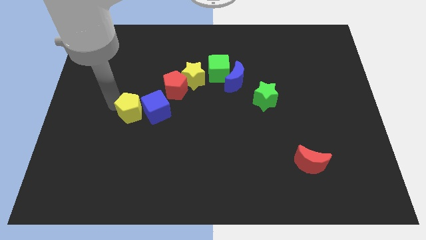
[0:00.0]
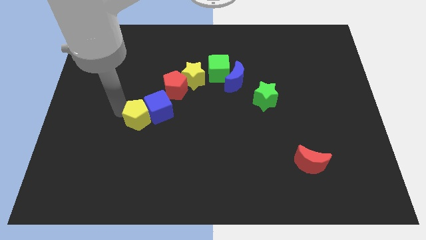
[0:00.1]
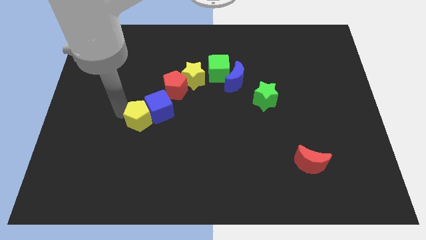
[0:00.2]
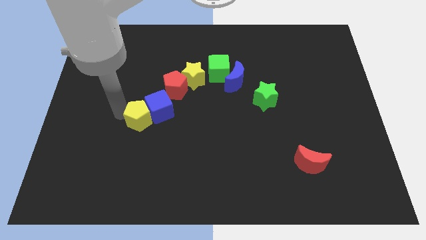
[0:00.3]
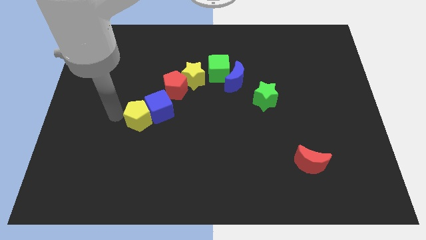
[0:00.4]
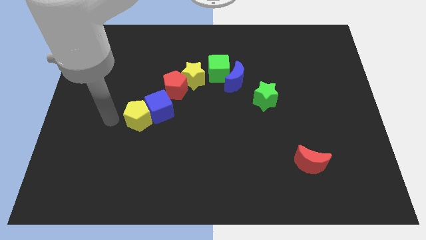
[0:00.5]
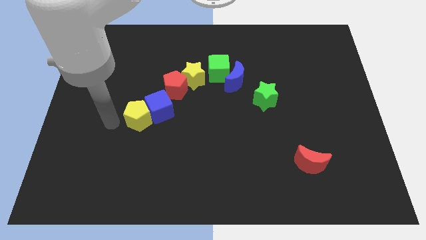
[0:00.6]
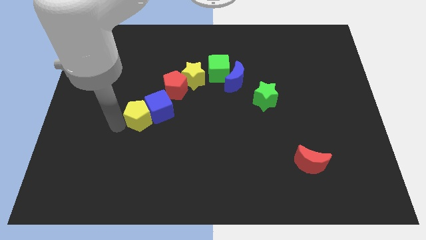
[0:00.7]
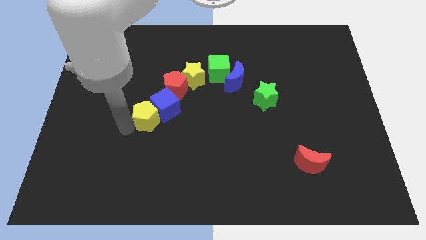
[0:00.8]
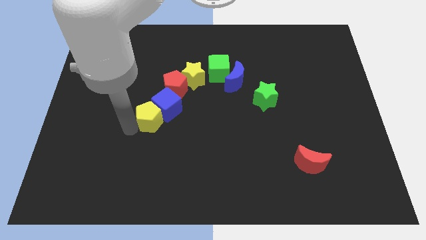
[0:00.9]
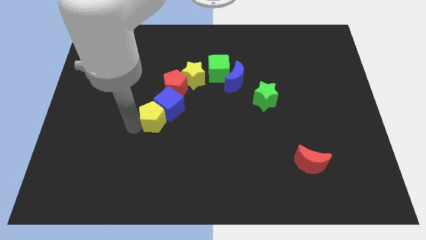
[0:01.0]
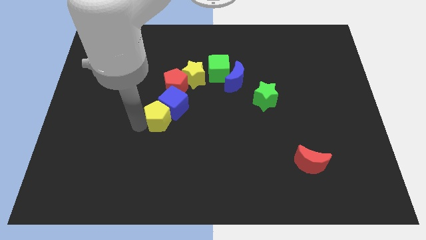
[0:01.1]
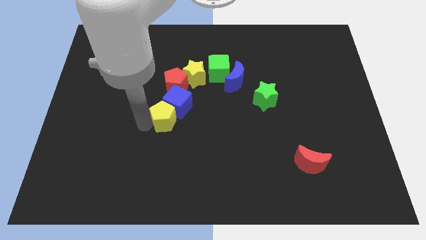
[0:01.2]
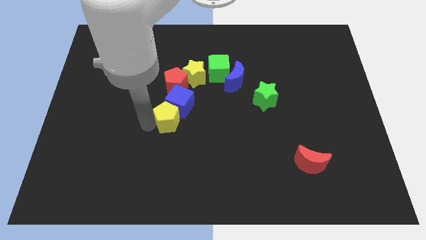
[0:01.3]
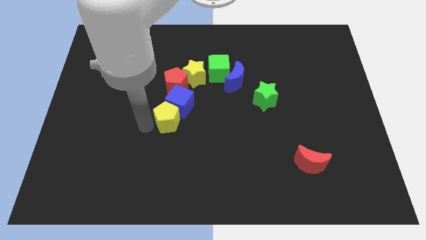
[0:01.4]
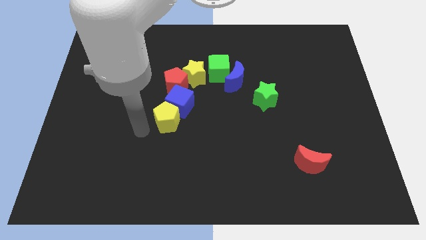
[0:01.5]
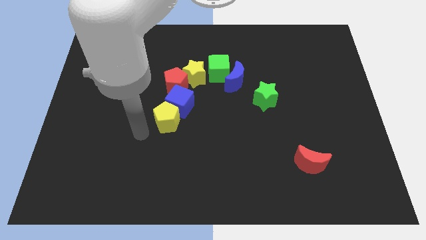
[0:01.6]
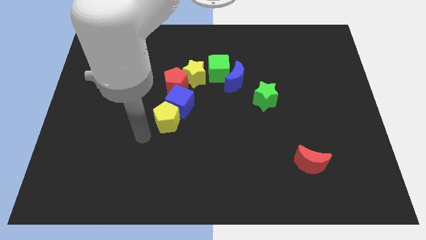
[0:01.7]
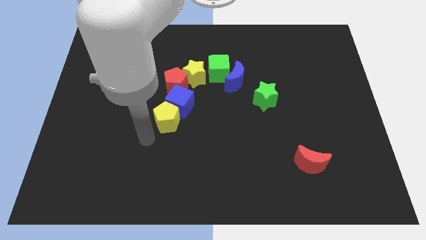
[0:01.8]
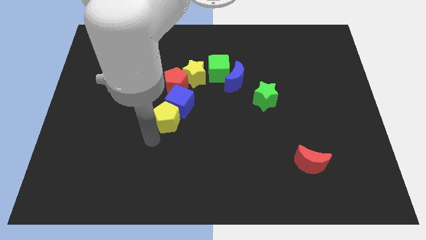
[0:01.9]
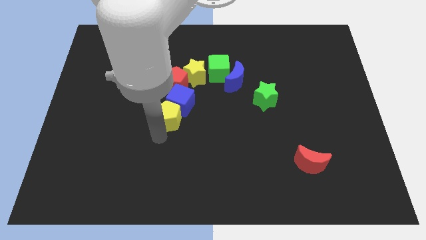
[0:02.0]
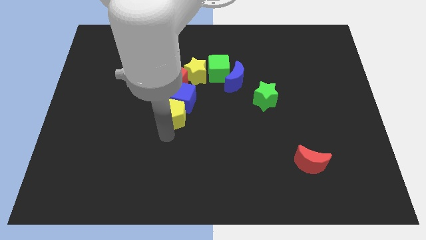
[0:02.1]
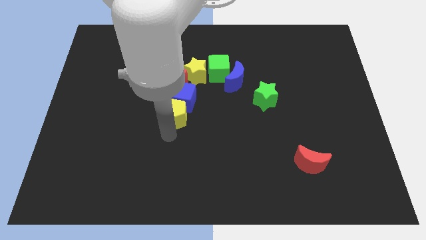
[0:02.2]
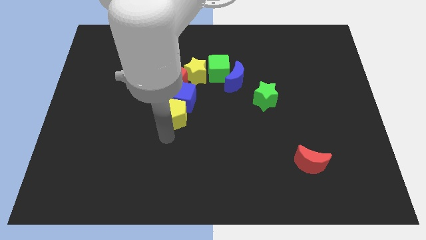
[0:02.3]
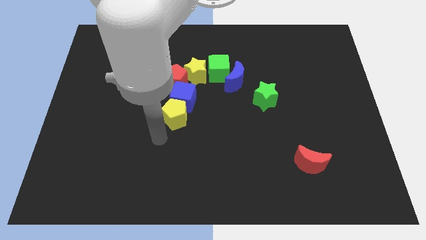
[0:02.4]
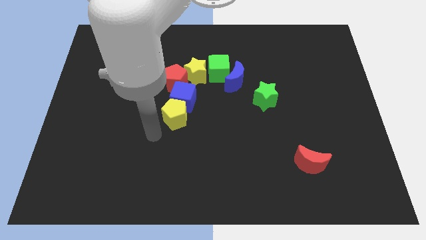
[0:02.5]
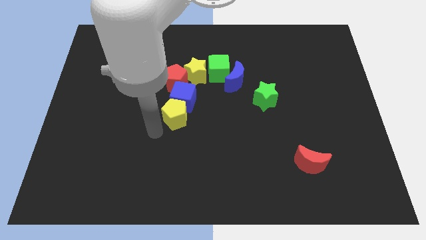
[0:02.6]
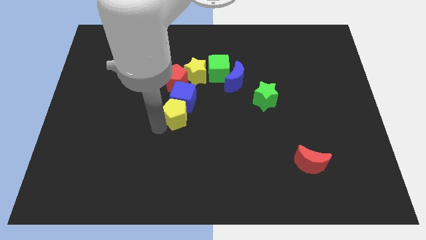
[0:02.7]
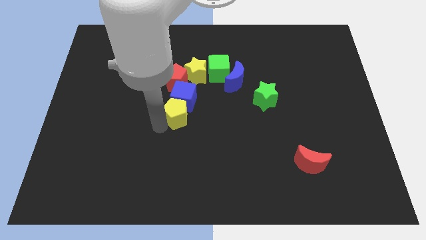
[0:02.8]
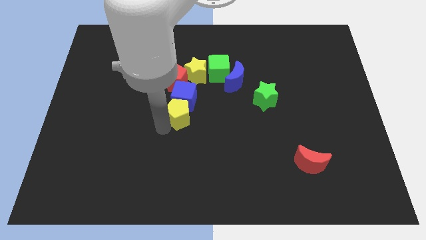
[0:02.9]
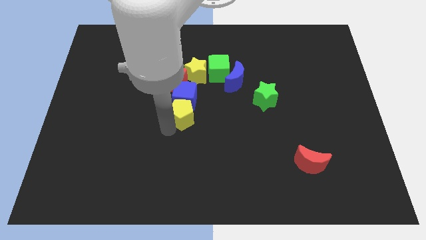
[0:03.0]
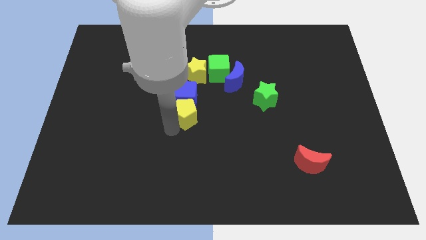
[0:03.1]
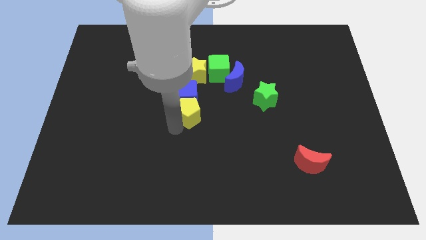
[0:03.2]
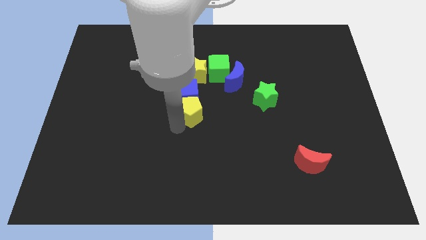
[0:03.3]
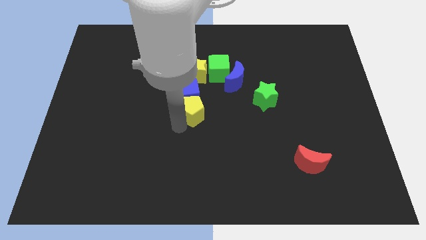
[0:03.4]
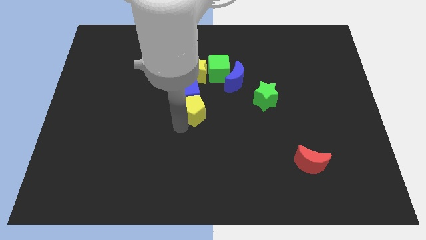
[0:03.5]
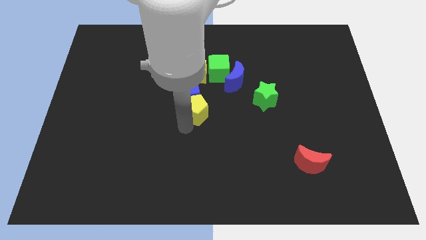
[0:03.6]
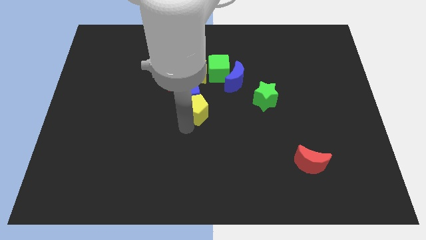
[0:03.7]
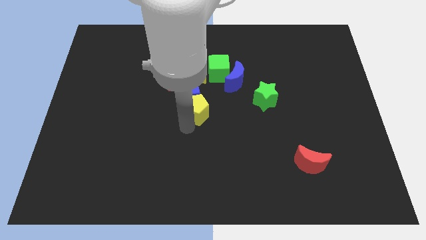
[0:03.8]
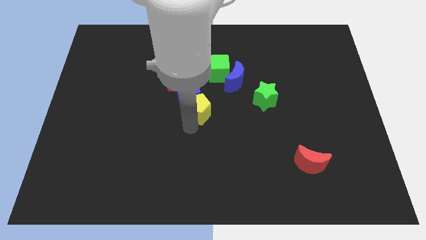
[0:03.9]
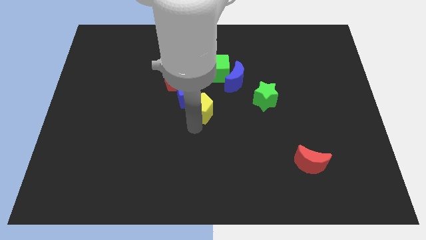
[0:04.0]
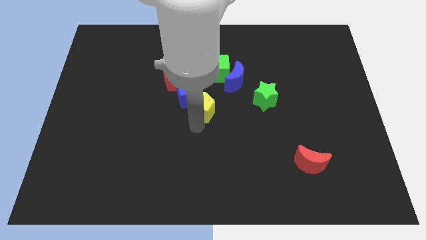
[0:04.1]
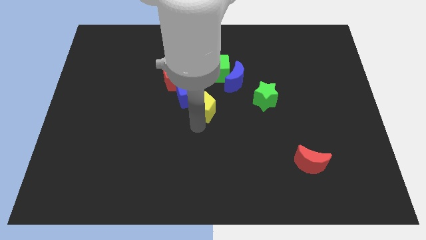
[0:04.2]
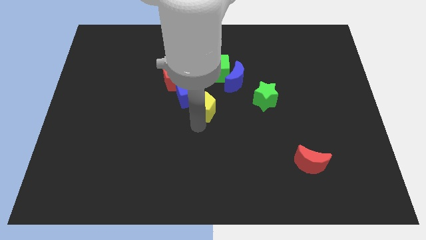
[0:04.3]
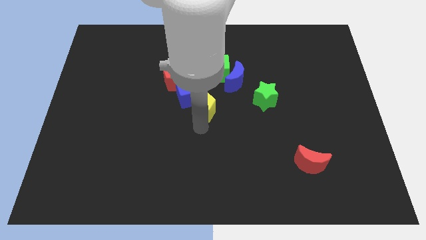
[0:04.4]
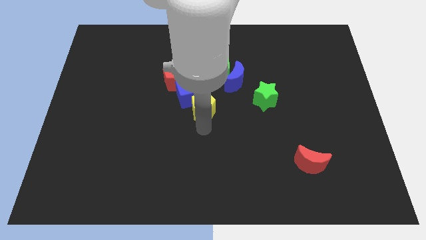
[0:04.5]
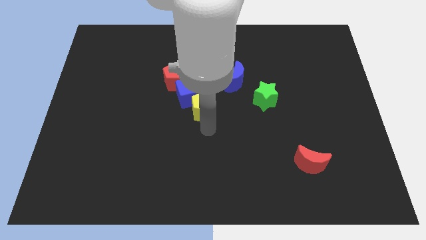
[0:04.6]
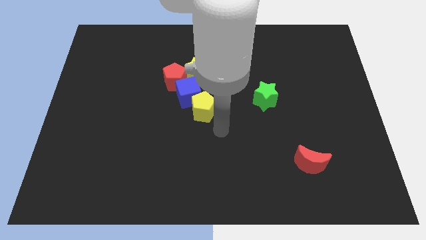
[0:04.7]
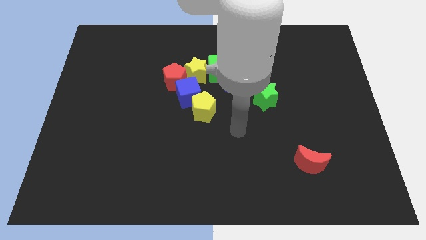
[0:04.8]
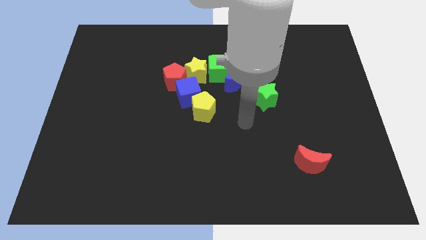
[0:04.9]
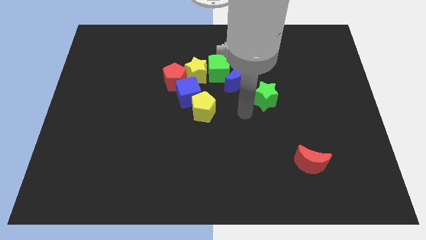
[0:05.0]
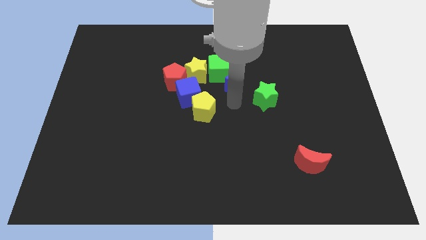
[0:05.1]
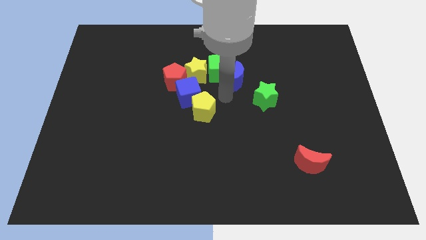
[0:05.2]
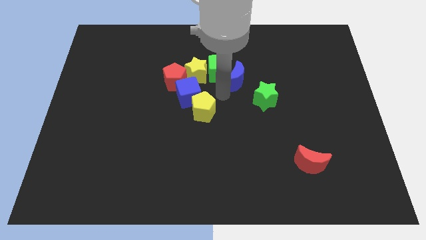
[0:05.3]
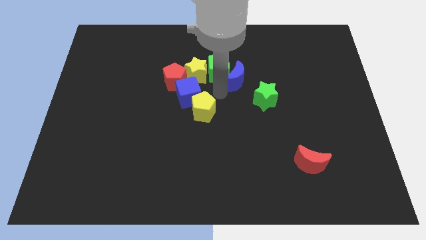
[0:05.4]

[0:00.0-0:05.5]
push the yellow pentagon vertically below the yellow star

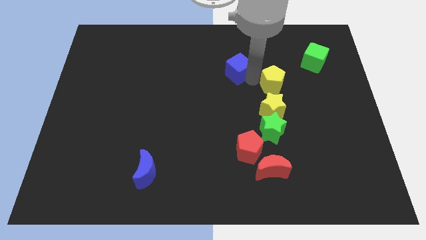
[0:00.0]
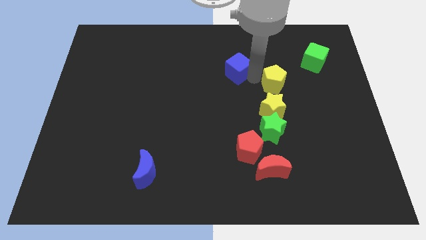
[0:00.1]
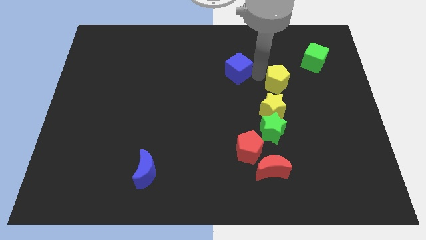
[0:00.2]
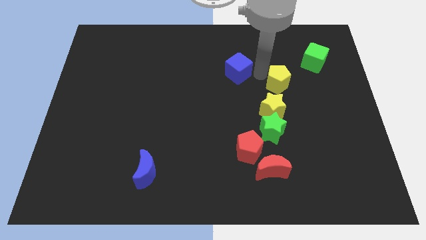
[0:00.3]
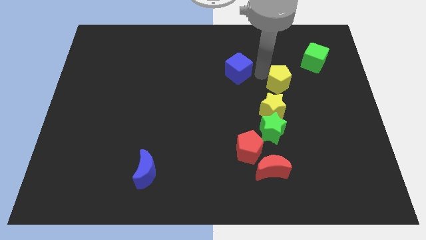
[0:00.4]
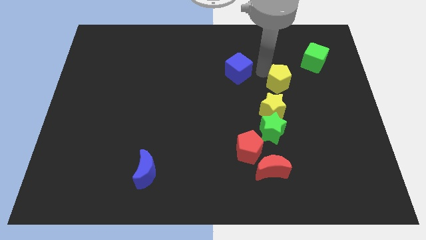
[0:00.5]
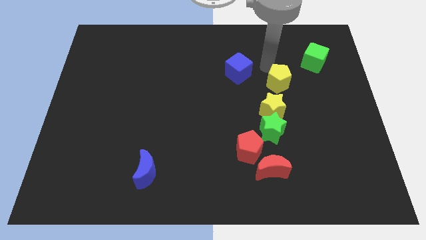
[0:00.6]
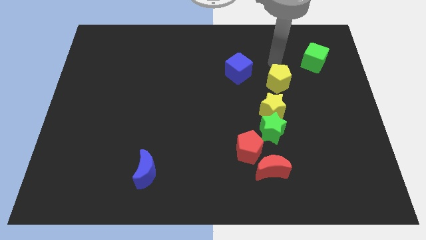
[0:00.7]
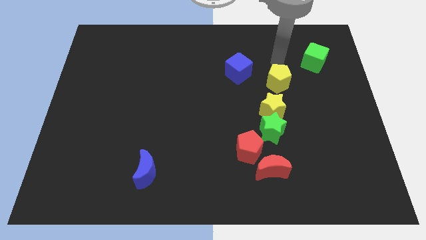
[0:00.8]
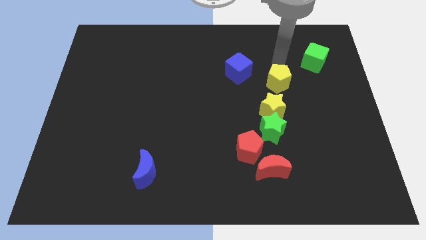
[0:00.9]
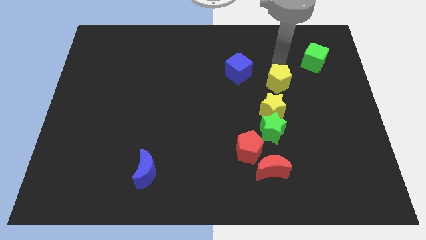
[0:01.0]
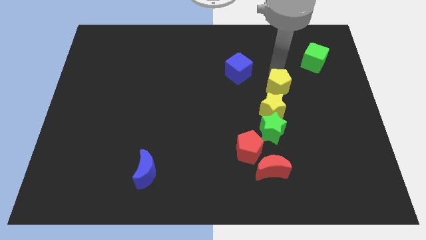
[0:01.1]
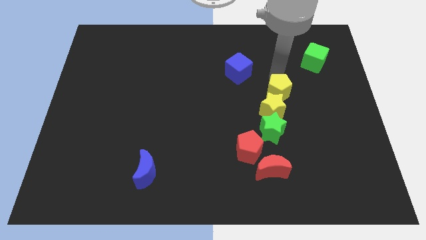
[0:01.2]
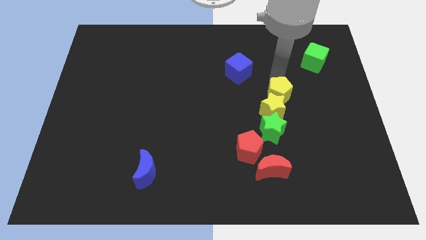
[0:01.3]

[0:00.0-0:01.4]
push the yellow pentagon above the yellow star

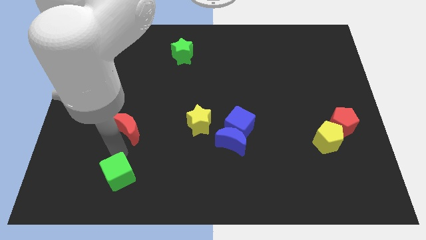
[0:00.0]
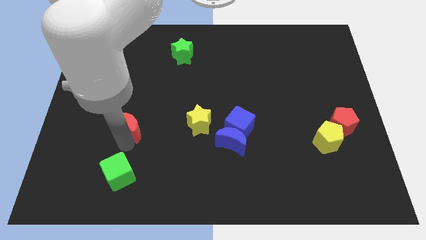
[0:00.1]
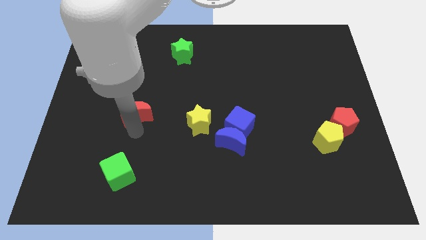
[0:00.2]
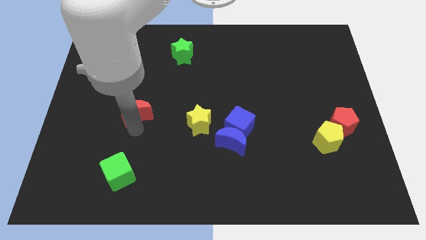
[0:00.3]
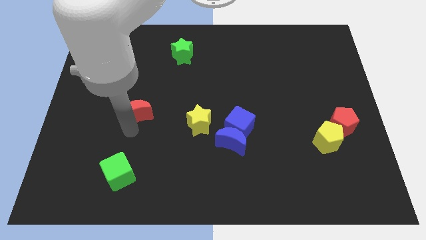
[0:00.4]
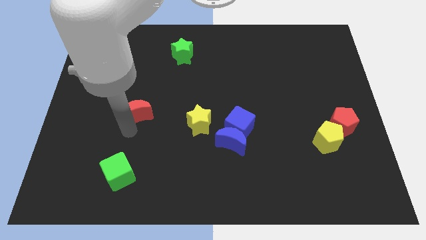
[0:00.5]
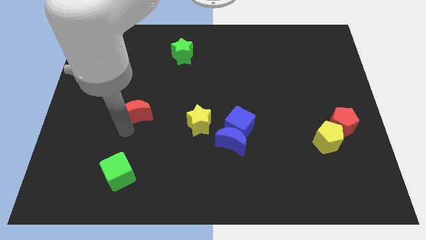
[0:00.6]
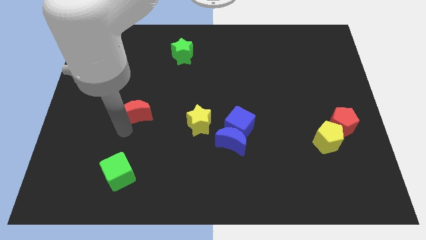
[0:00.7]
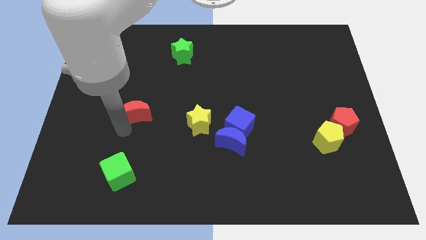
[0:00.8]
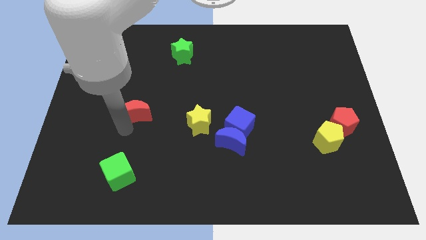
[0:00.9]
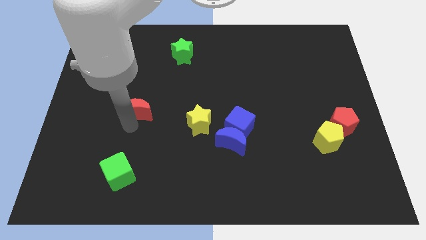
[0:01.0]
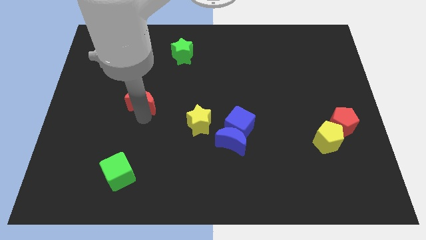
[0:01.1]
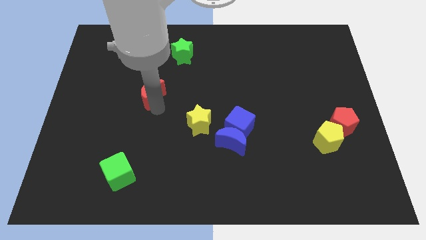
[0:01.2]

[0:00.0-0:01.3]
move the red crescent to the top left of the yellow star

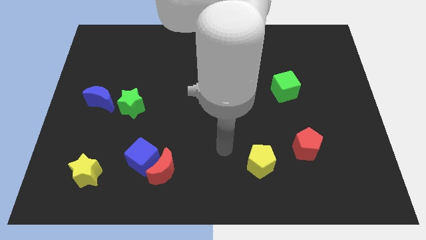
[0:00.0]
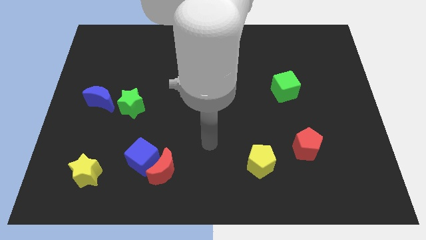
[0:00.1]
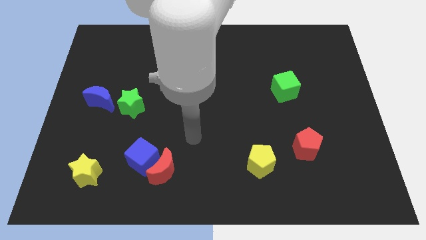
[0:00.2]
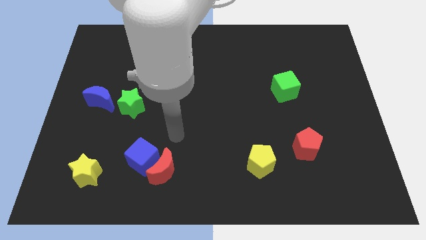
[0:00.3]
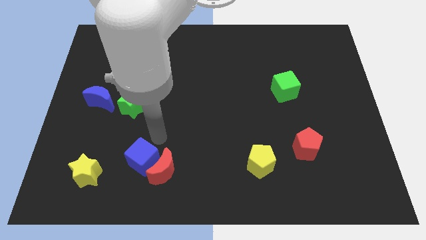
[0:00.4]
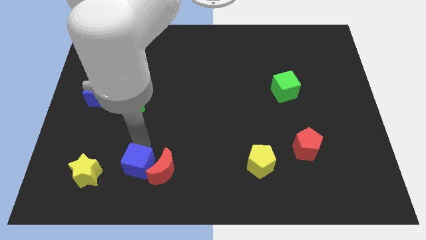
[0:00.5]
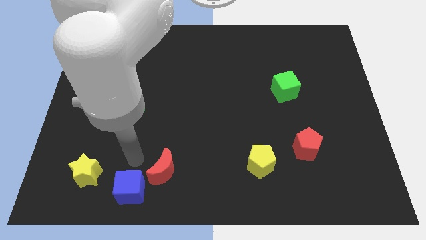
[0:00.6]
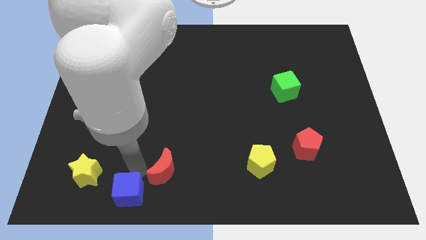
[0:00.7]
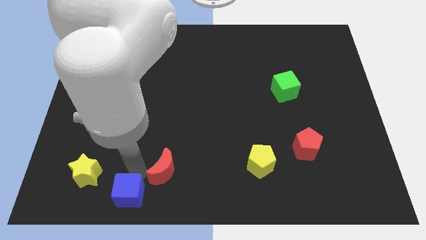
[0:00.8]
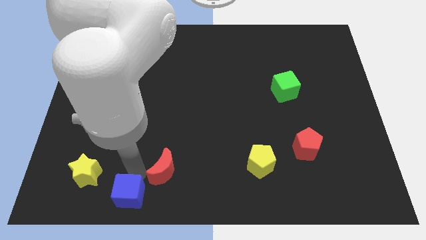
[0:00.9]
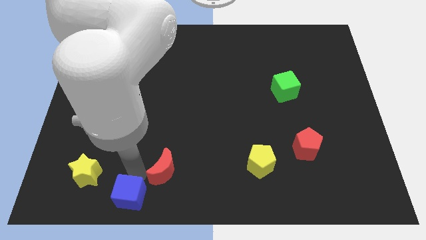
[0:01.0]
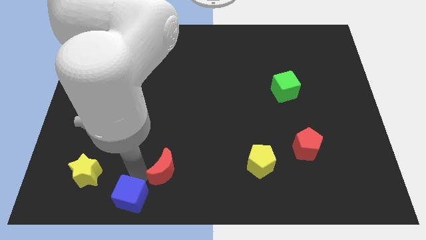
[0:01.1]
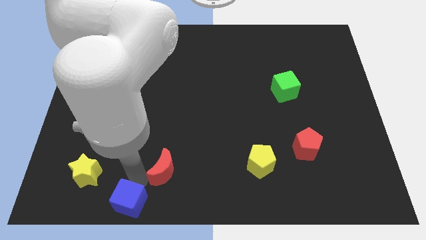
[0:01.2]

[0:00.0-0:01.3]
push the blue cube to the bottom left of the red moon
